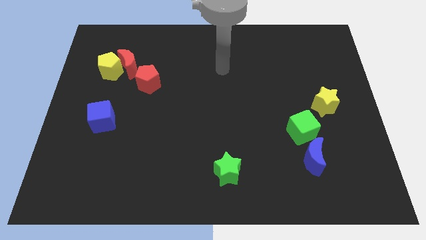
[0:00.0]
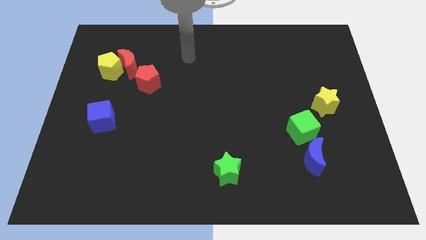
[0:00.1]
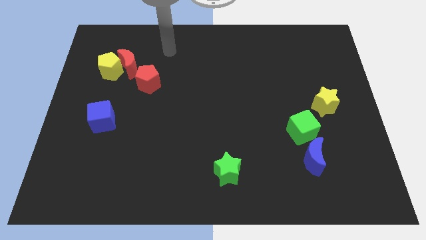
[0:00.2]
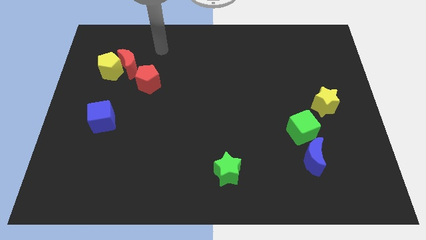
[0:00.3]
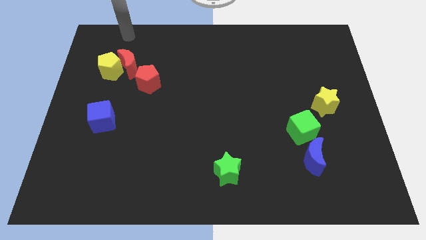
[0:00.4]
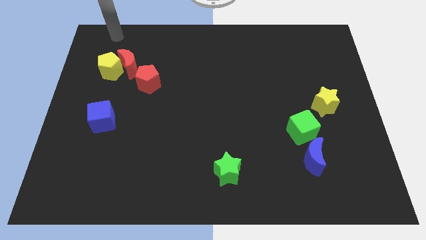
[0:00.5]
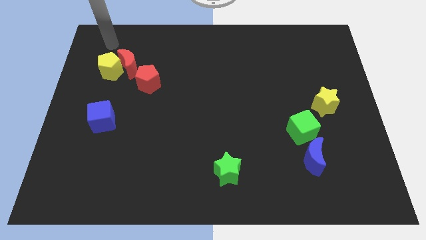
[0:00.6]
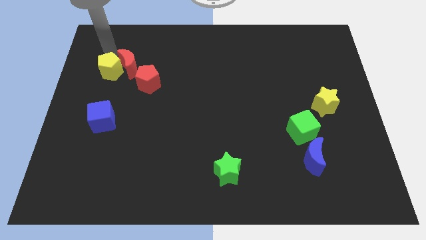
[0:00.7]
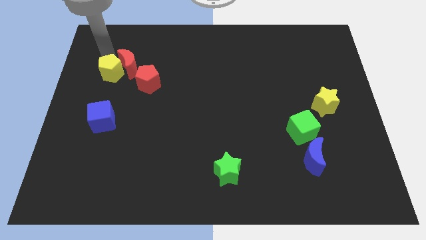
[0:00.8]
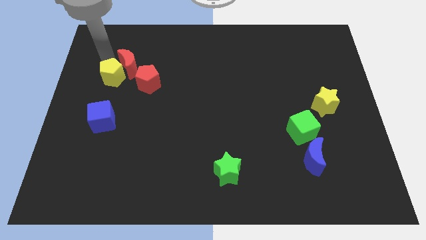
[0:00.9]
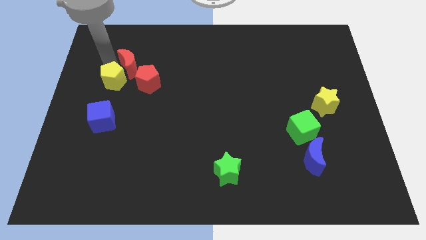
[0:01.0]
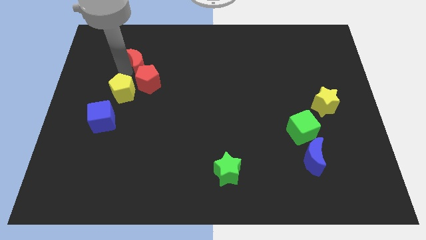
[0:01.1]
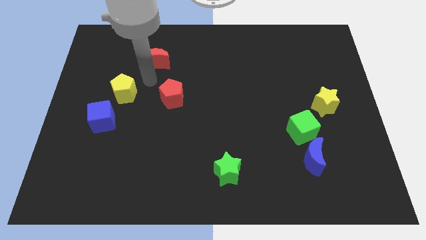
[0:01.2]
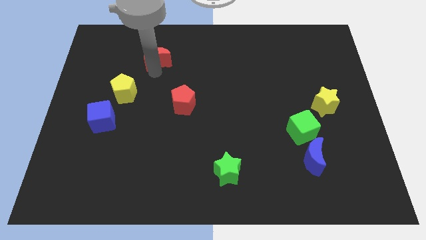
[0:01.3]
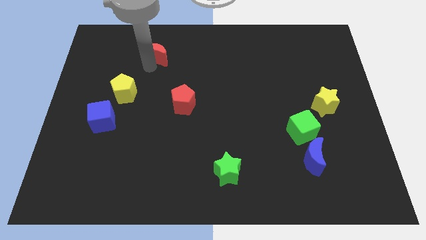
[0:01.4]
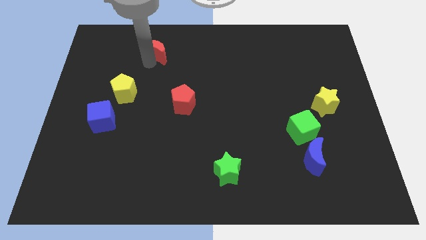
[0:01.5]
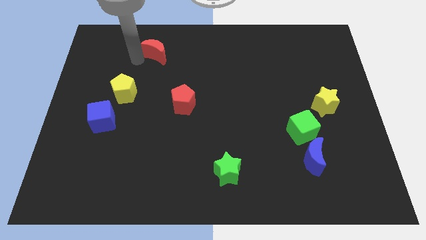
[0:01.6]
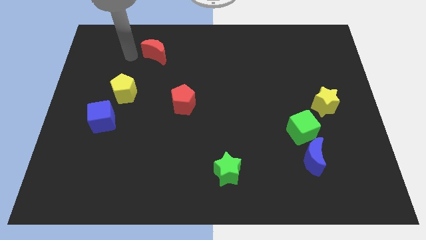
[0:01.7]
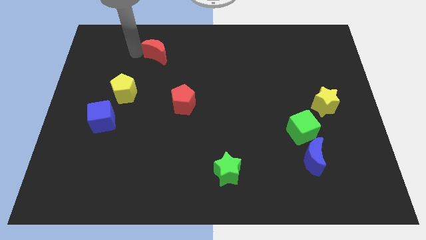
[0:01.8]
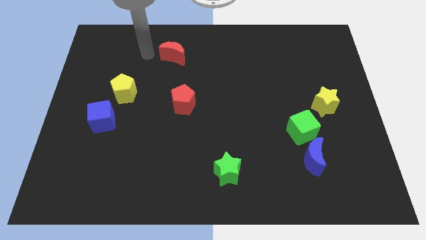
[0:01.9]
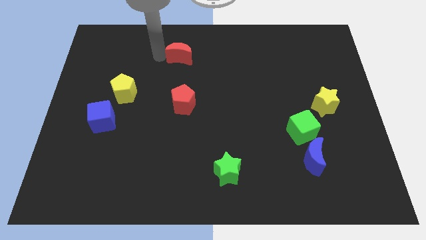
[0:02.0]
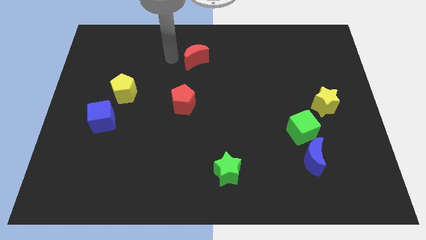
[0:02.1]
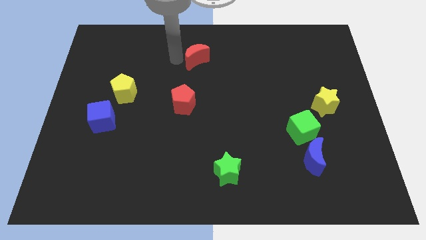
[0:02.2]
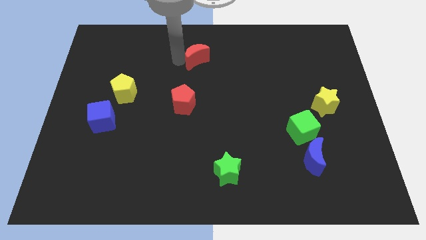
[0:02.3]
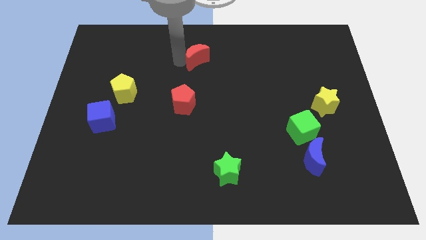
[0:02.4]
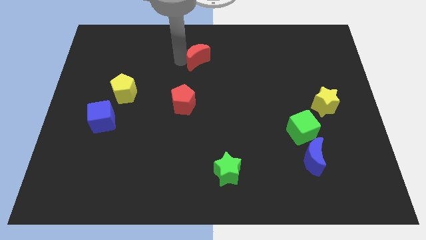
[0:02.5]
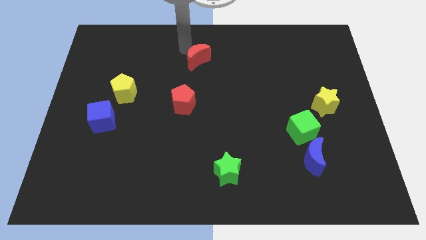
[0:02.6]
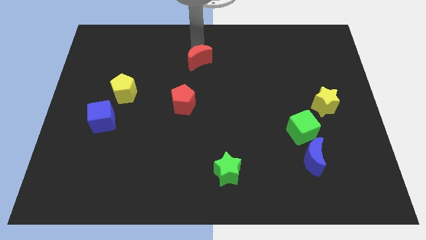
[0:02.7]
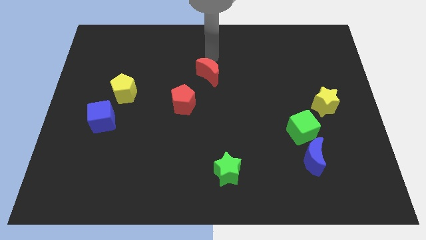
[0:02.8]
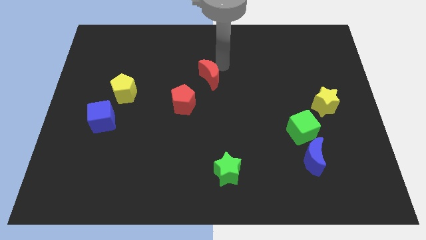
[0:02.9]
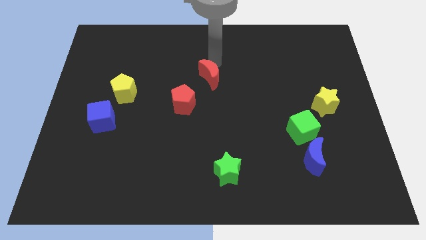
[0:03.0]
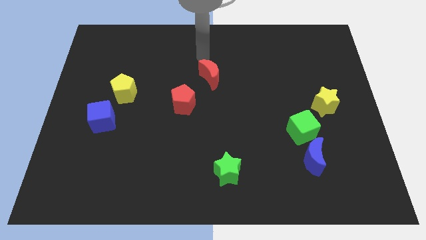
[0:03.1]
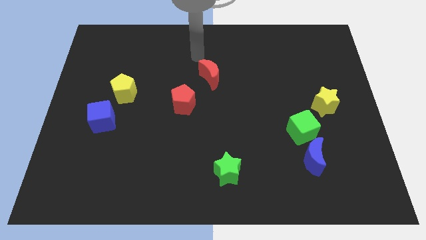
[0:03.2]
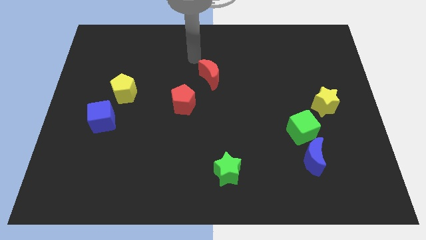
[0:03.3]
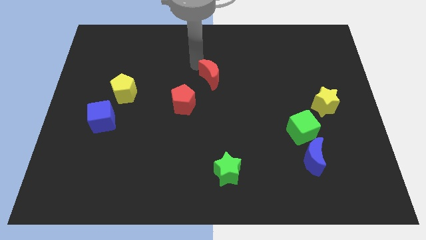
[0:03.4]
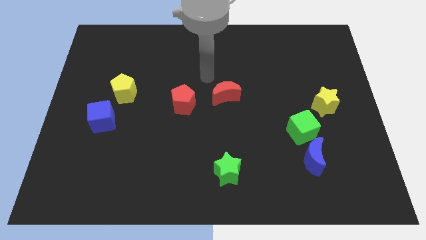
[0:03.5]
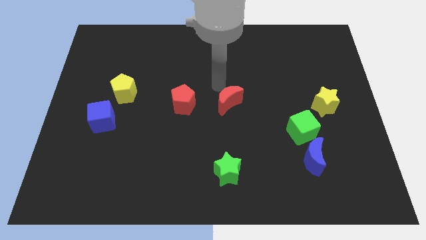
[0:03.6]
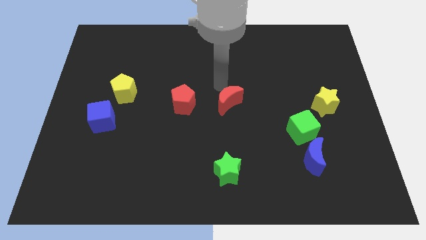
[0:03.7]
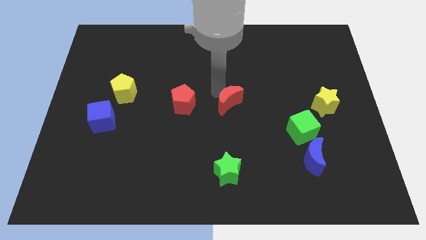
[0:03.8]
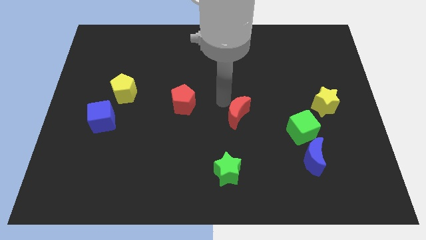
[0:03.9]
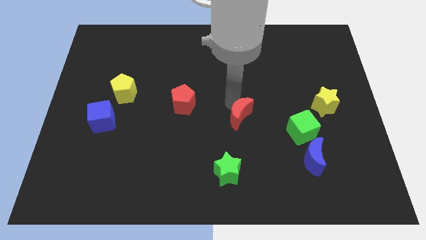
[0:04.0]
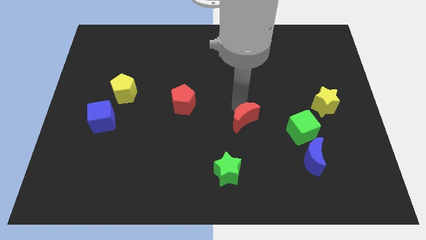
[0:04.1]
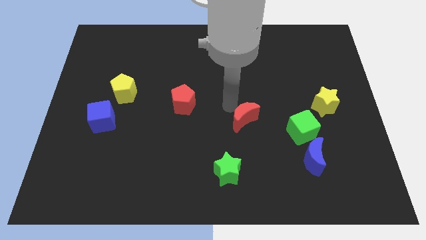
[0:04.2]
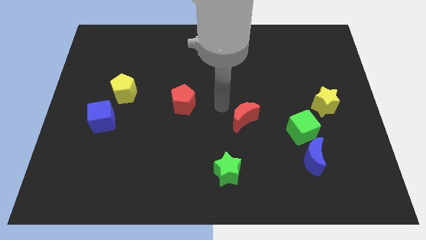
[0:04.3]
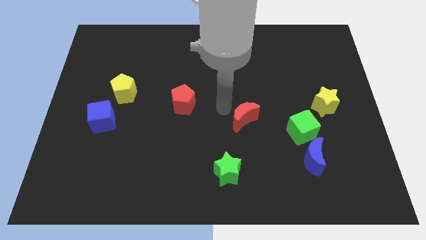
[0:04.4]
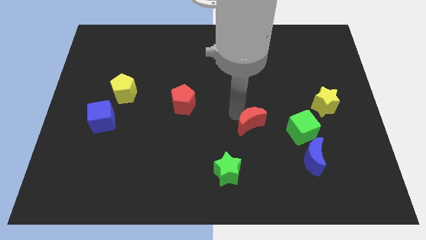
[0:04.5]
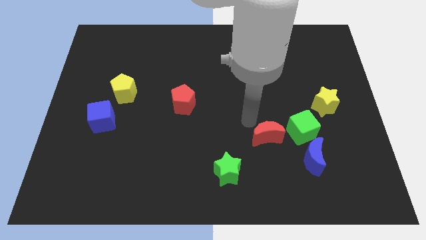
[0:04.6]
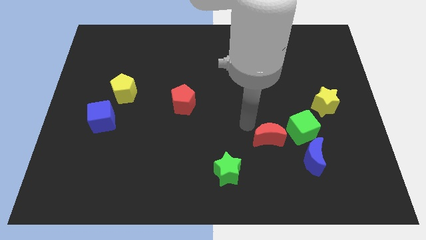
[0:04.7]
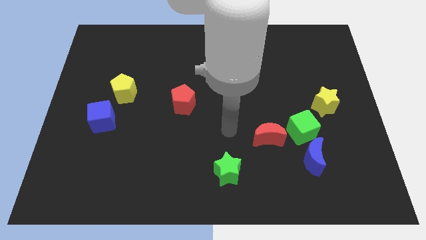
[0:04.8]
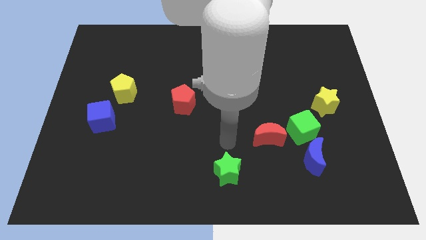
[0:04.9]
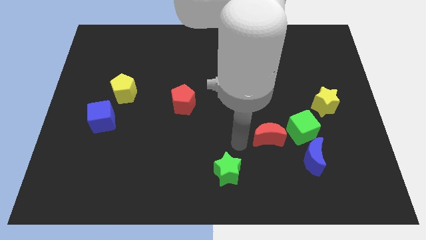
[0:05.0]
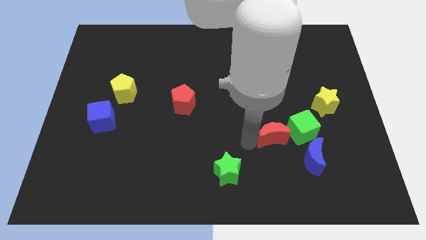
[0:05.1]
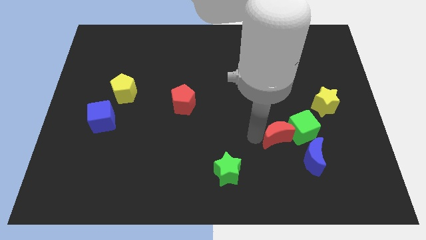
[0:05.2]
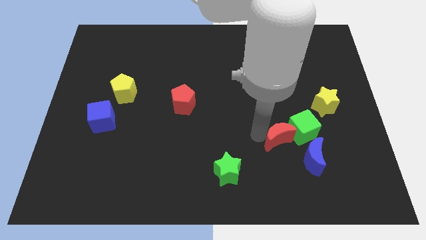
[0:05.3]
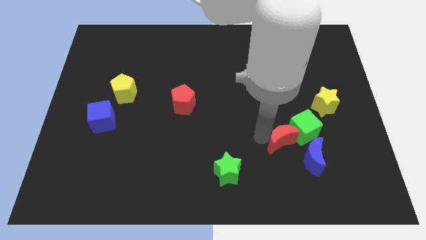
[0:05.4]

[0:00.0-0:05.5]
put the red moon to the green cube

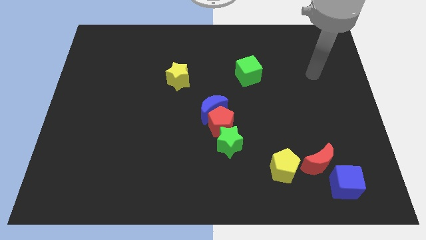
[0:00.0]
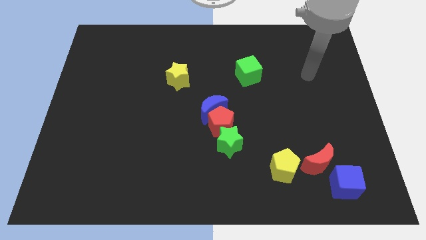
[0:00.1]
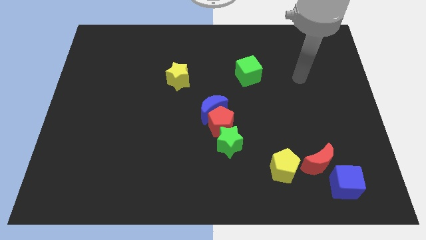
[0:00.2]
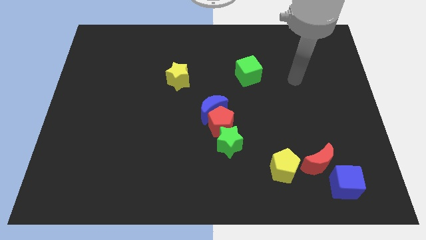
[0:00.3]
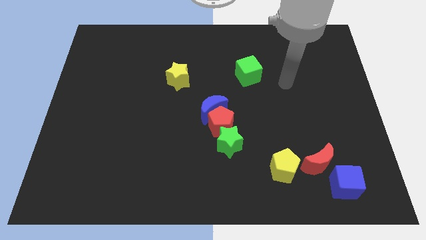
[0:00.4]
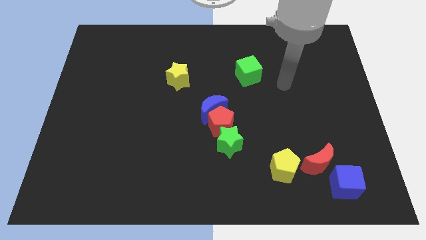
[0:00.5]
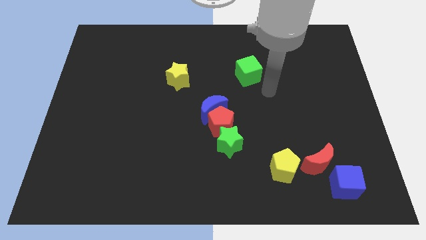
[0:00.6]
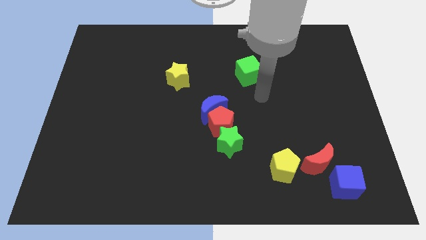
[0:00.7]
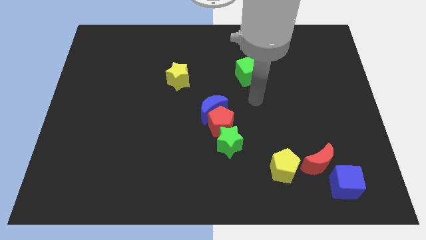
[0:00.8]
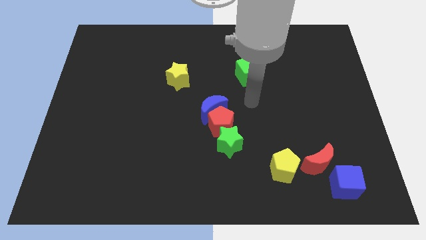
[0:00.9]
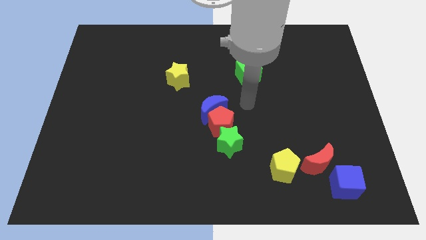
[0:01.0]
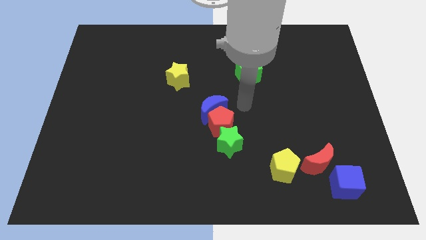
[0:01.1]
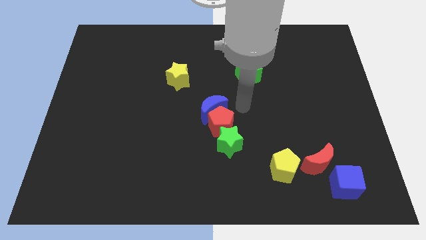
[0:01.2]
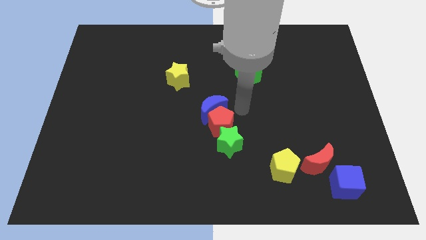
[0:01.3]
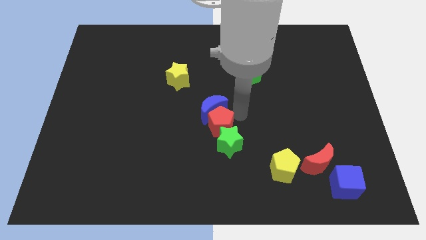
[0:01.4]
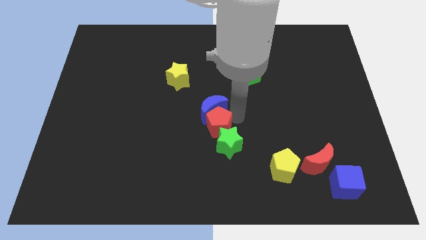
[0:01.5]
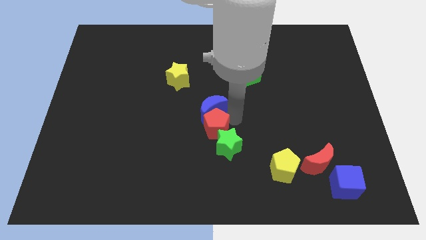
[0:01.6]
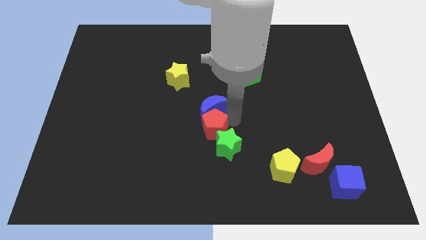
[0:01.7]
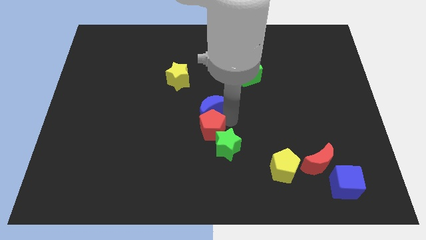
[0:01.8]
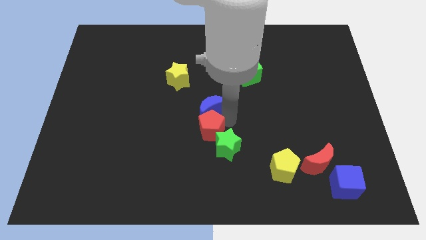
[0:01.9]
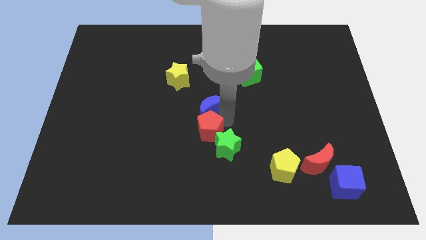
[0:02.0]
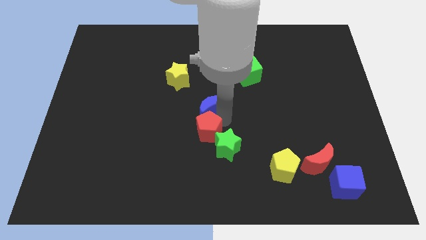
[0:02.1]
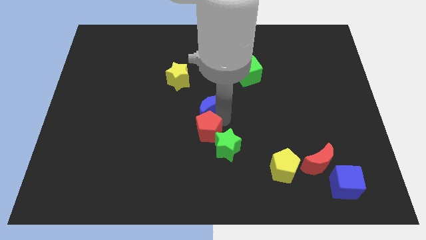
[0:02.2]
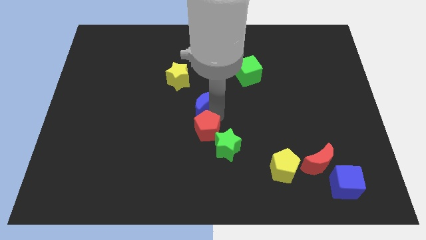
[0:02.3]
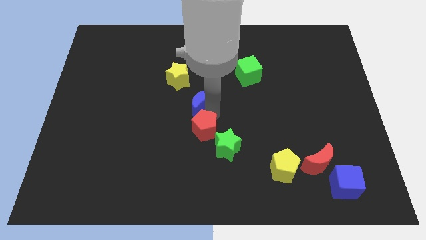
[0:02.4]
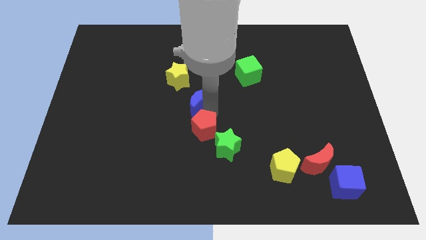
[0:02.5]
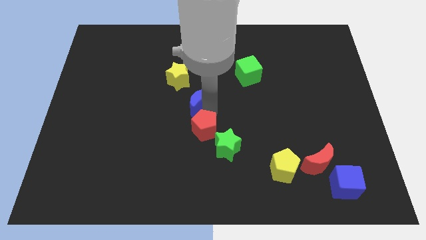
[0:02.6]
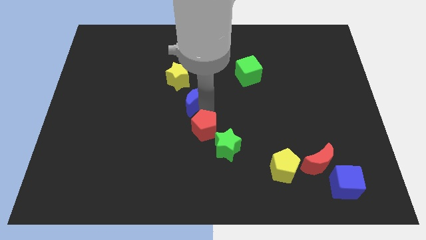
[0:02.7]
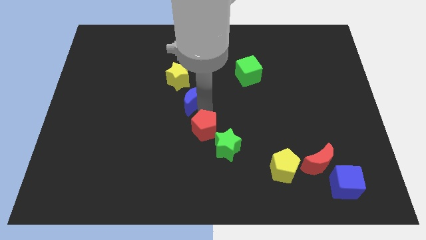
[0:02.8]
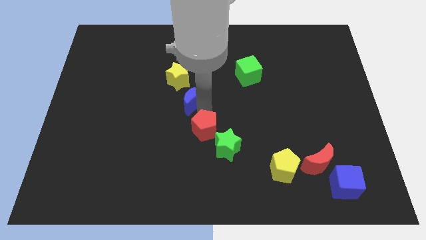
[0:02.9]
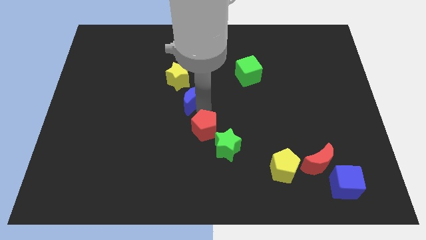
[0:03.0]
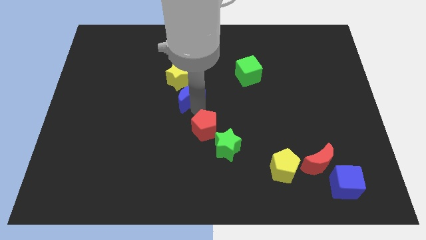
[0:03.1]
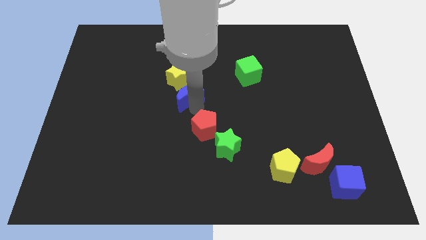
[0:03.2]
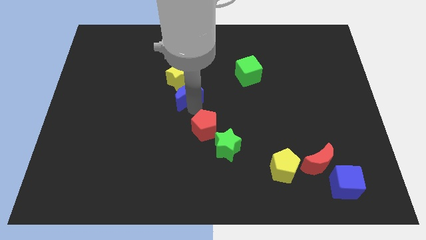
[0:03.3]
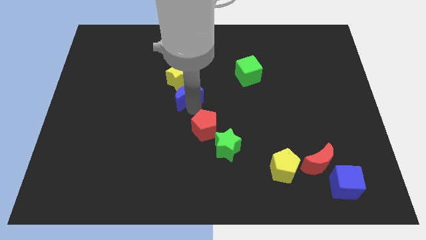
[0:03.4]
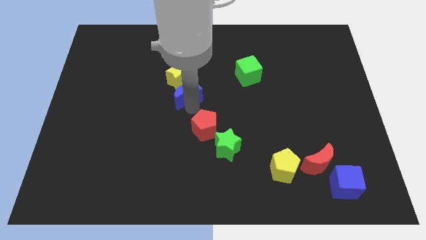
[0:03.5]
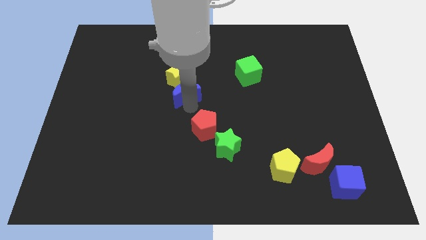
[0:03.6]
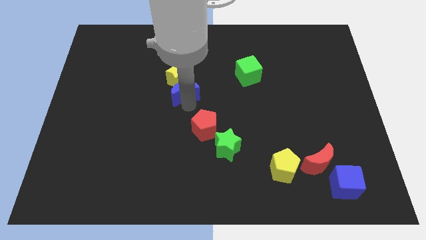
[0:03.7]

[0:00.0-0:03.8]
put the blue moon towards the yellow star
